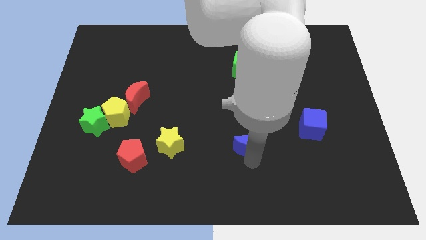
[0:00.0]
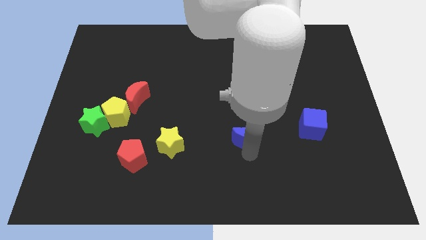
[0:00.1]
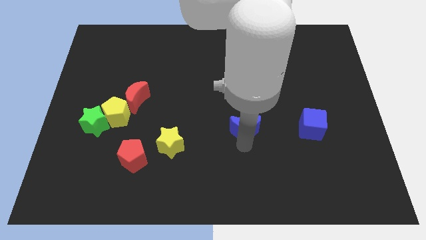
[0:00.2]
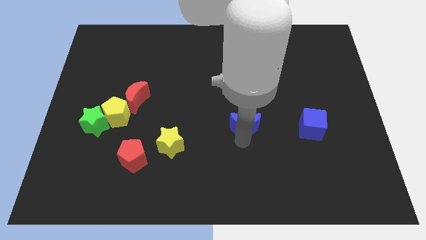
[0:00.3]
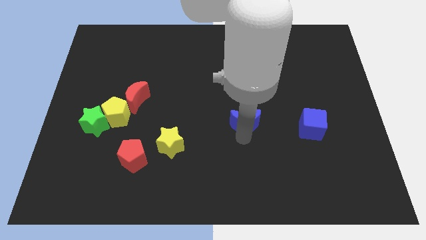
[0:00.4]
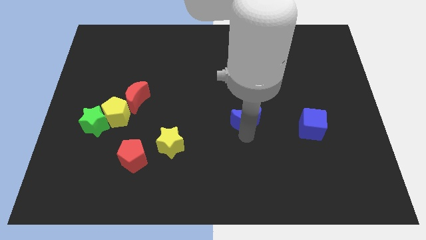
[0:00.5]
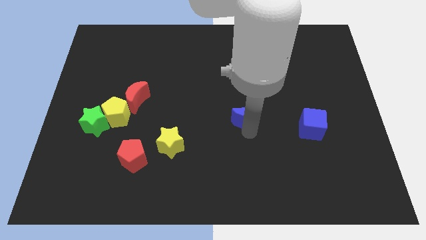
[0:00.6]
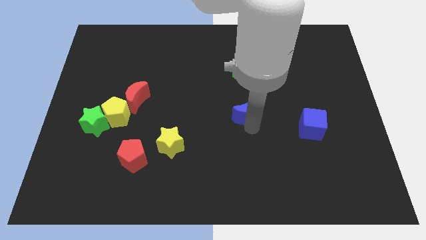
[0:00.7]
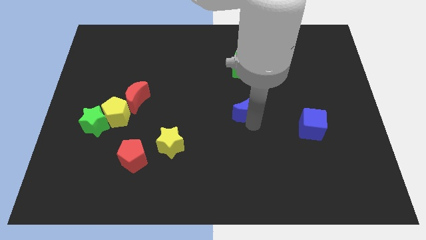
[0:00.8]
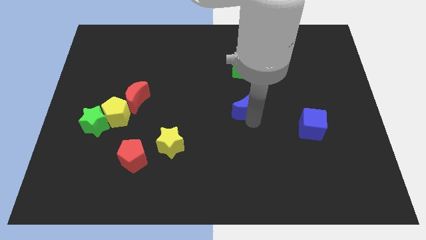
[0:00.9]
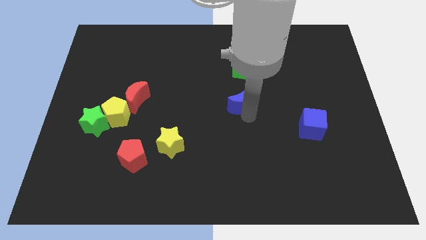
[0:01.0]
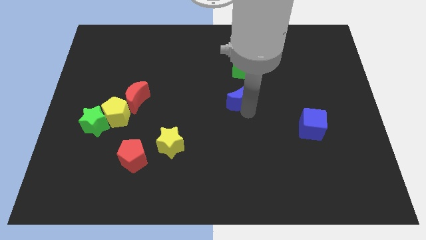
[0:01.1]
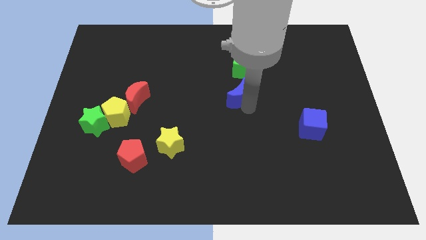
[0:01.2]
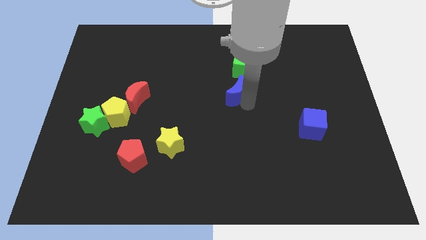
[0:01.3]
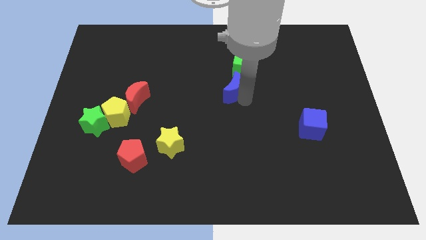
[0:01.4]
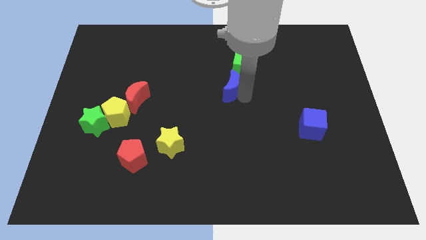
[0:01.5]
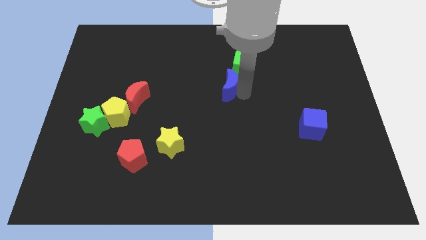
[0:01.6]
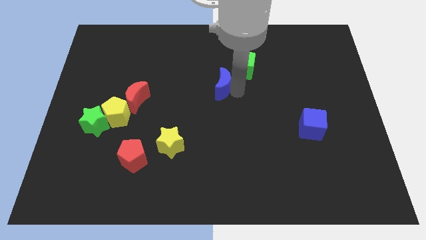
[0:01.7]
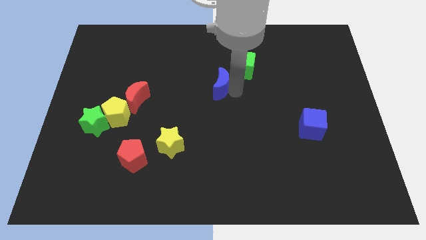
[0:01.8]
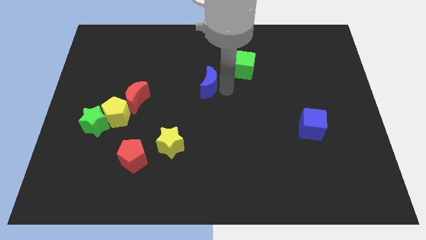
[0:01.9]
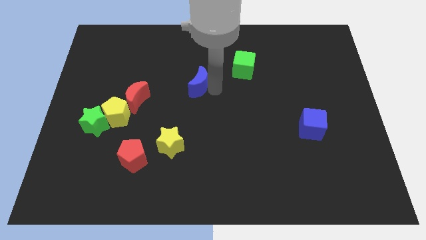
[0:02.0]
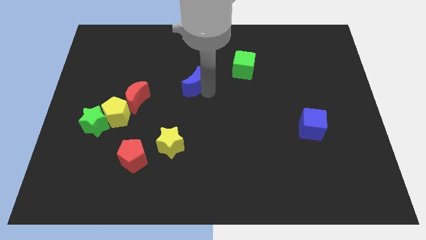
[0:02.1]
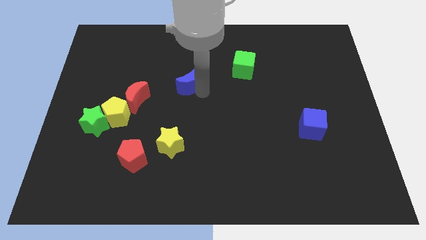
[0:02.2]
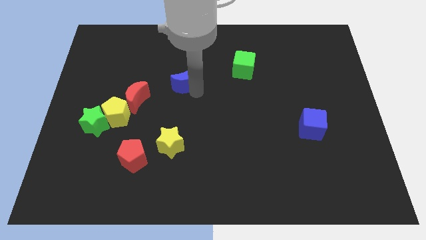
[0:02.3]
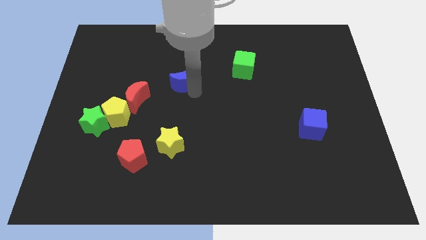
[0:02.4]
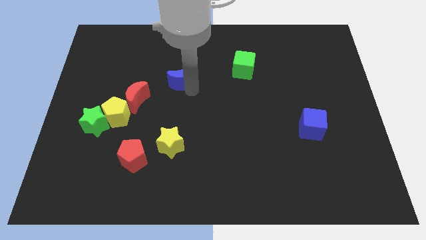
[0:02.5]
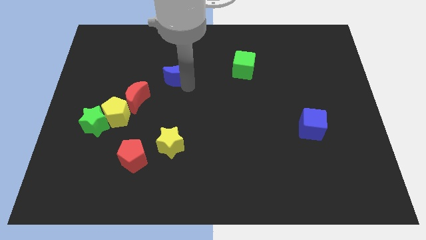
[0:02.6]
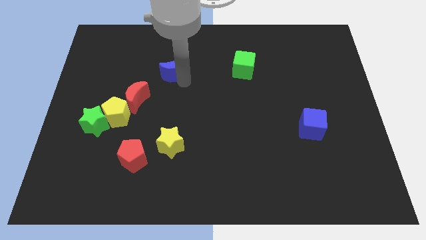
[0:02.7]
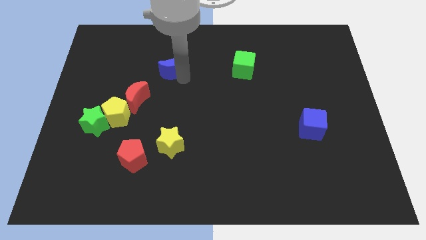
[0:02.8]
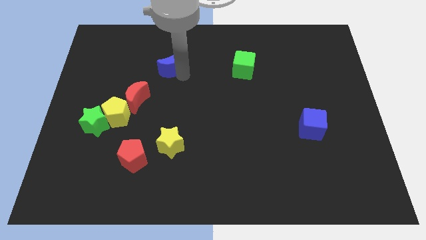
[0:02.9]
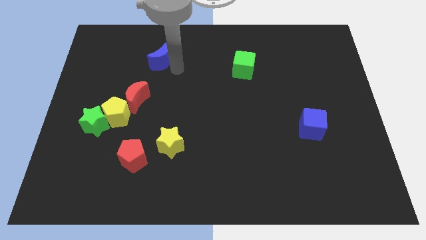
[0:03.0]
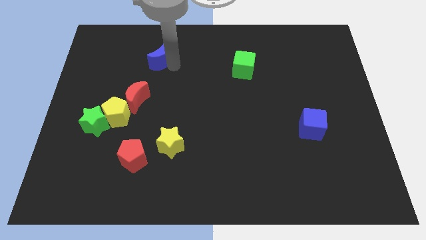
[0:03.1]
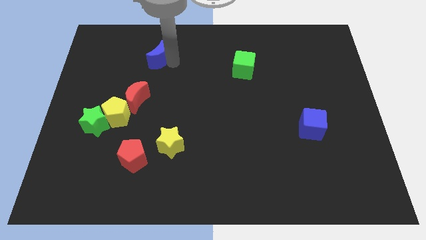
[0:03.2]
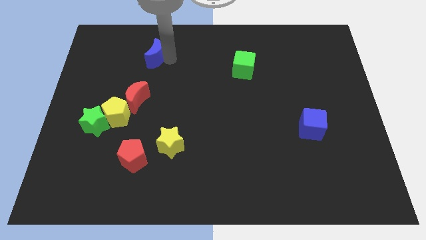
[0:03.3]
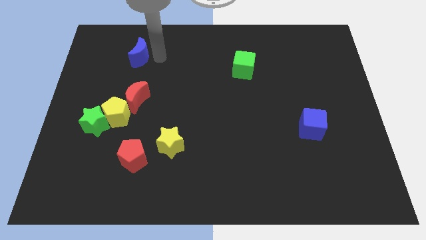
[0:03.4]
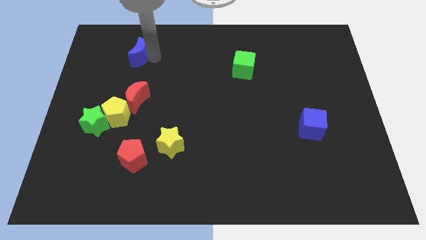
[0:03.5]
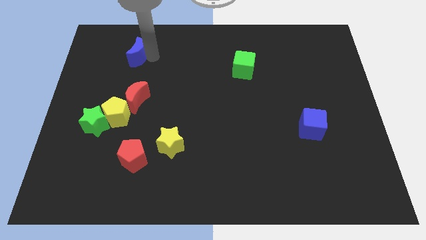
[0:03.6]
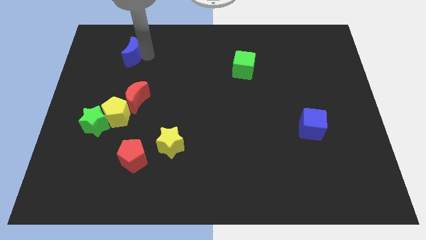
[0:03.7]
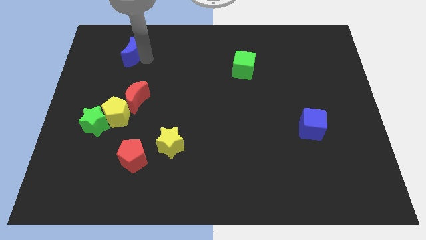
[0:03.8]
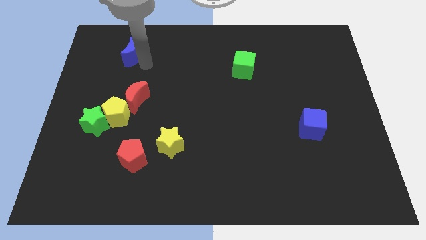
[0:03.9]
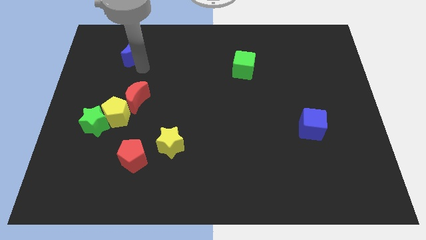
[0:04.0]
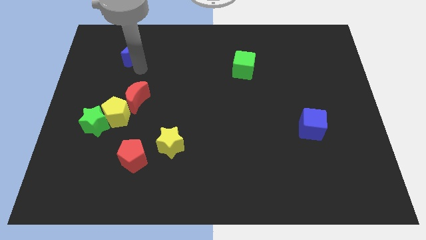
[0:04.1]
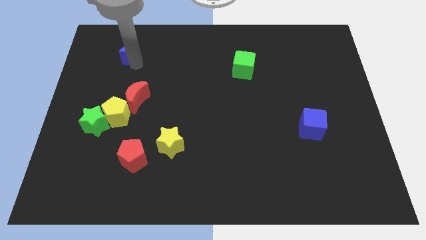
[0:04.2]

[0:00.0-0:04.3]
place blue moon above red moon

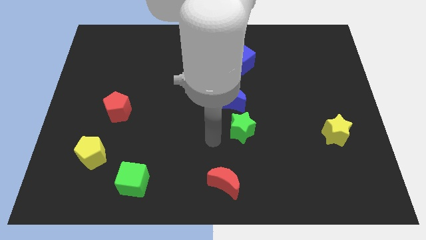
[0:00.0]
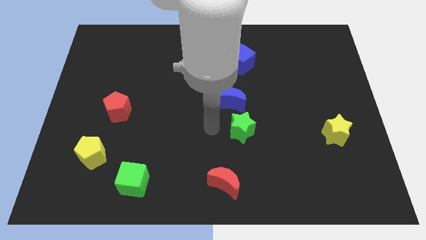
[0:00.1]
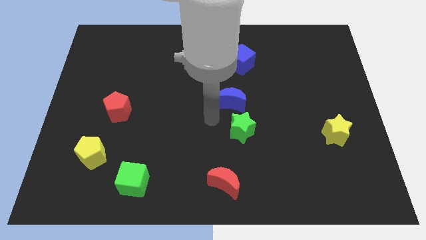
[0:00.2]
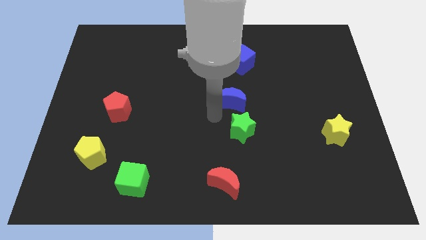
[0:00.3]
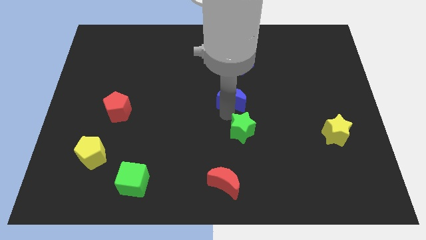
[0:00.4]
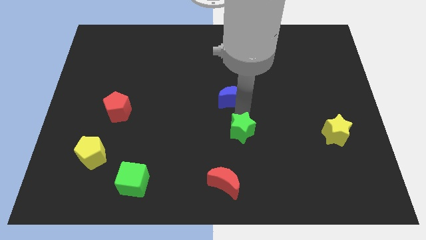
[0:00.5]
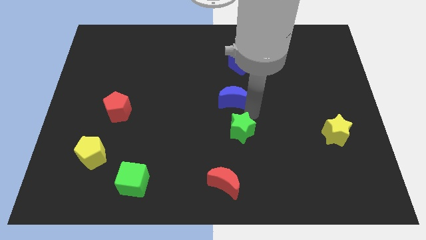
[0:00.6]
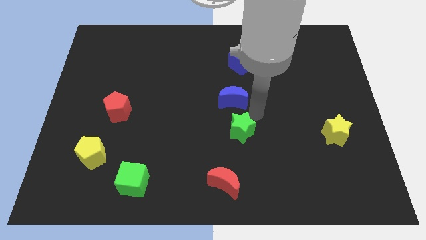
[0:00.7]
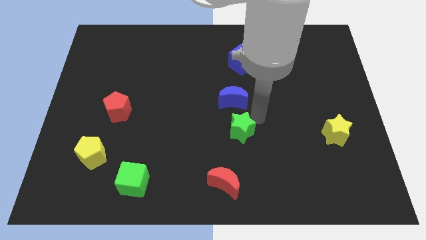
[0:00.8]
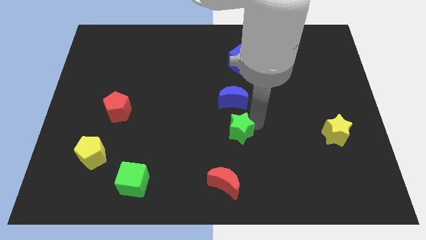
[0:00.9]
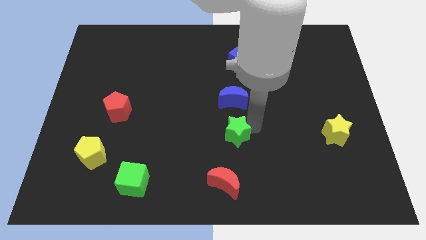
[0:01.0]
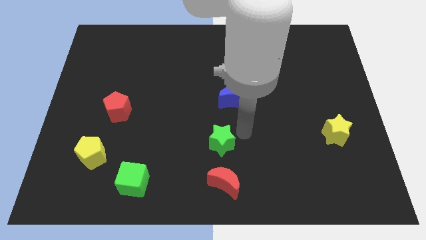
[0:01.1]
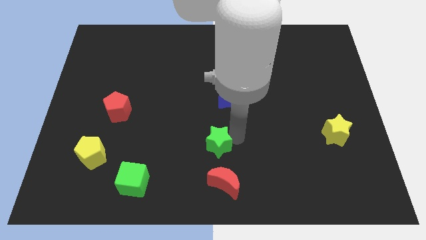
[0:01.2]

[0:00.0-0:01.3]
push the green star to the top side of the red moon

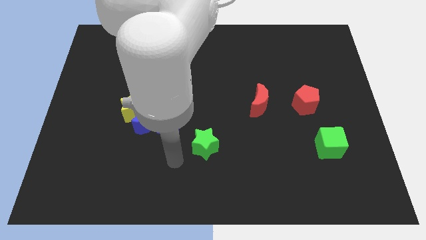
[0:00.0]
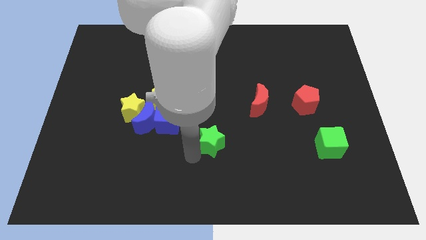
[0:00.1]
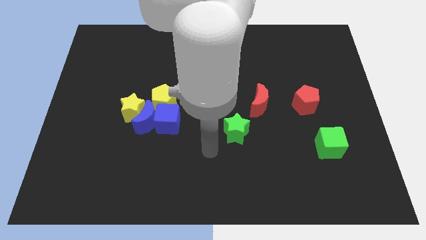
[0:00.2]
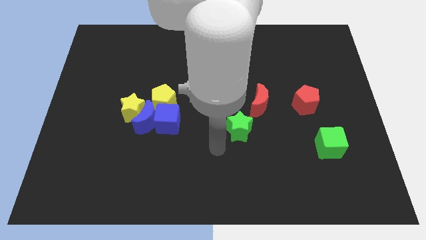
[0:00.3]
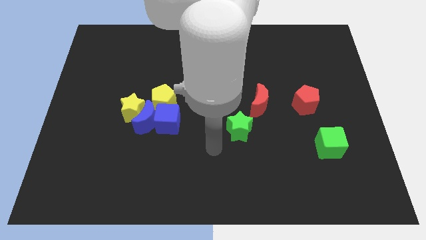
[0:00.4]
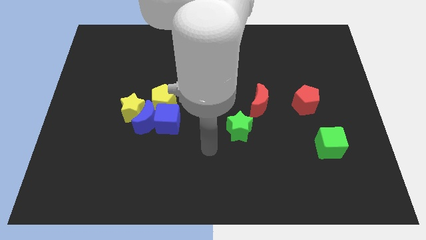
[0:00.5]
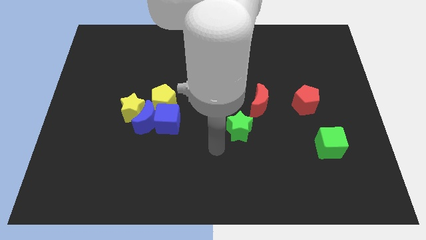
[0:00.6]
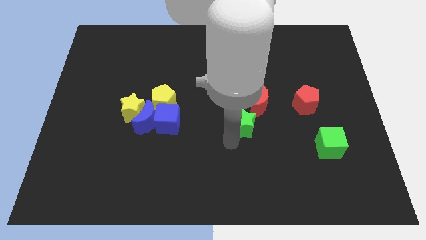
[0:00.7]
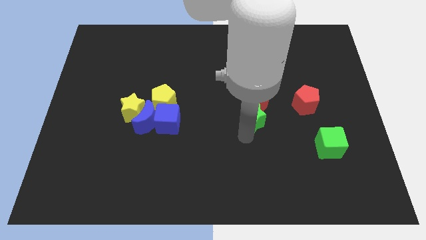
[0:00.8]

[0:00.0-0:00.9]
push the green star below the red crescent

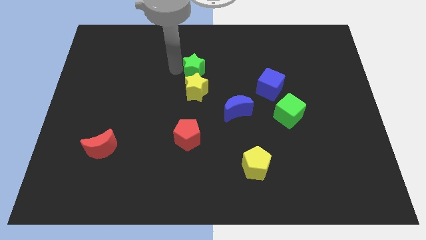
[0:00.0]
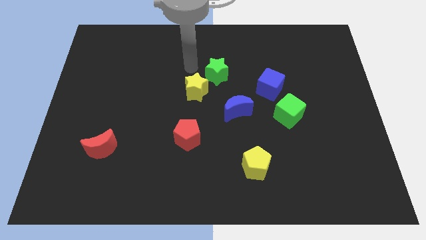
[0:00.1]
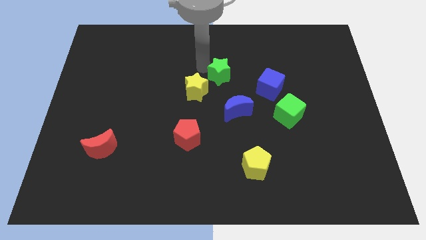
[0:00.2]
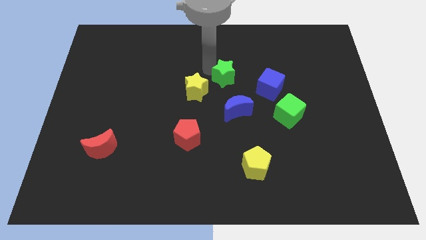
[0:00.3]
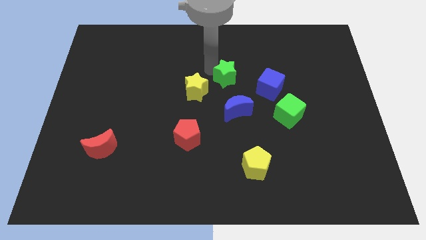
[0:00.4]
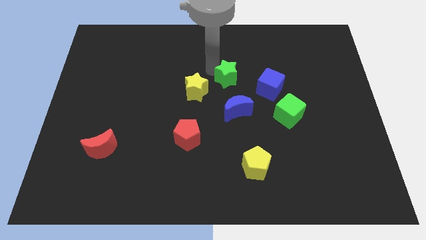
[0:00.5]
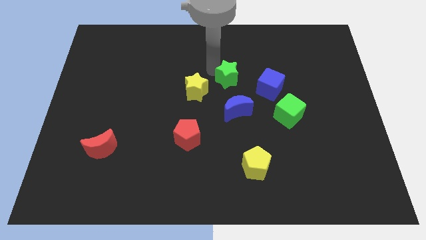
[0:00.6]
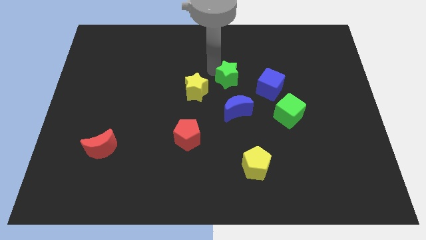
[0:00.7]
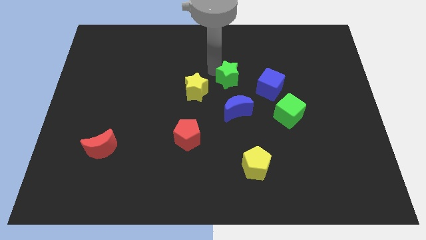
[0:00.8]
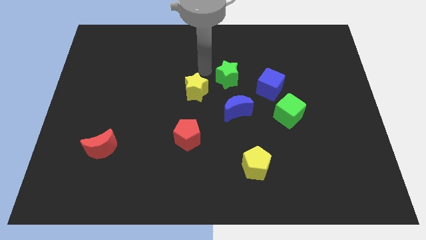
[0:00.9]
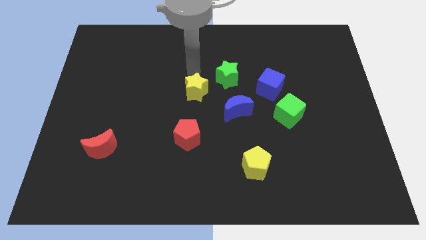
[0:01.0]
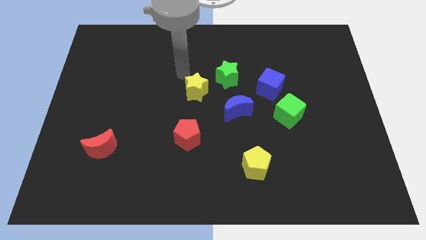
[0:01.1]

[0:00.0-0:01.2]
put the green star towards the blue cube

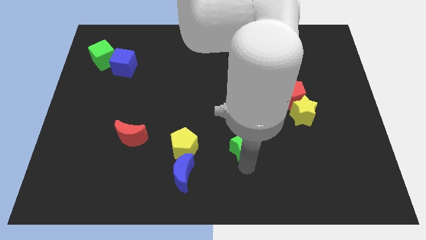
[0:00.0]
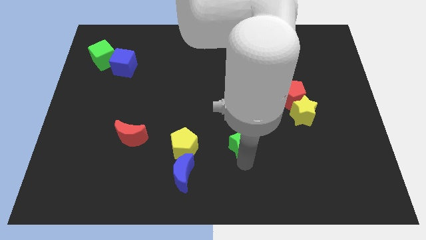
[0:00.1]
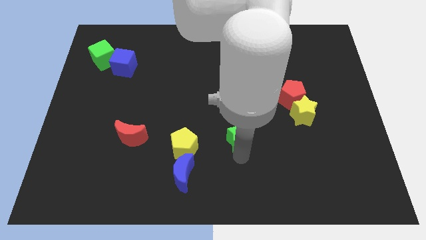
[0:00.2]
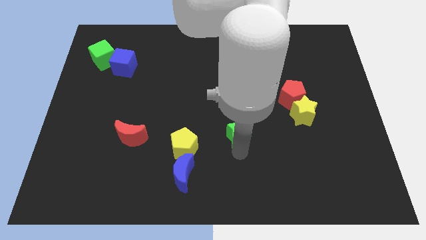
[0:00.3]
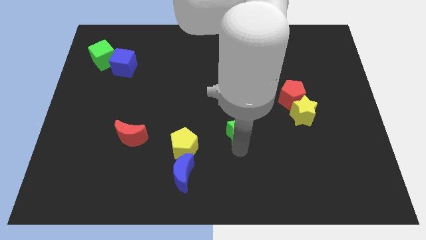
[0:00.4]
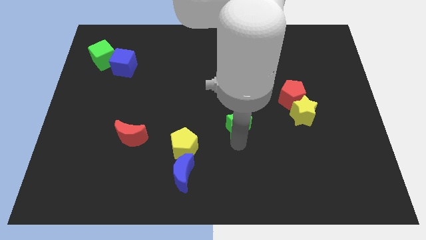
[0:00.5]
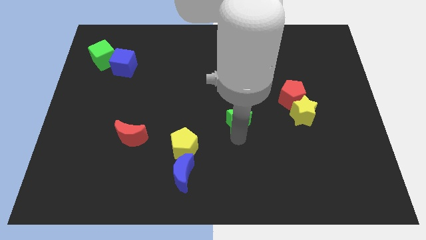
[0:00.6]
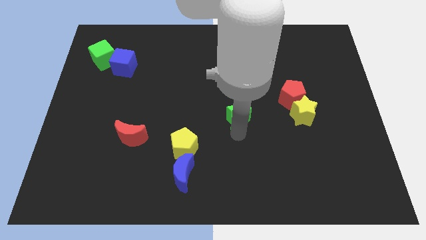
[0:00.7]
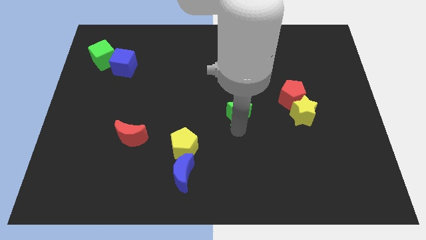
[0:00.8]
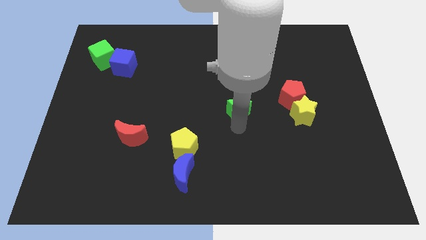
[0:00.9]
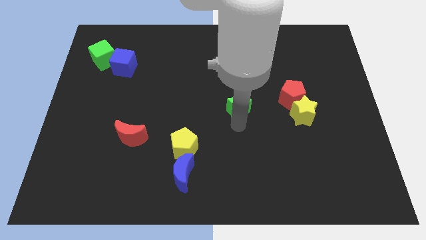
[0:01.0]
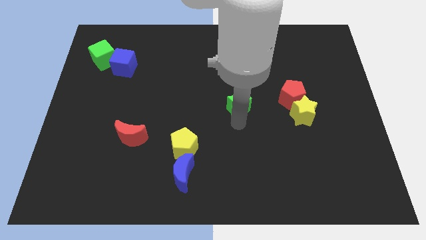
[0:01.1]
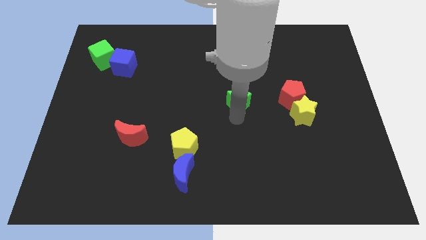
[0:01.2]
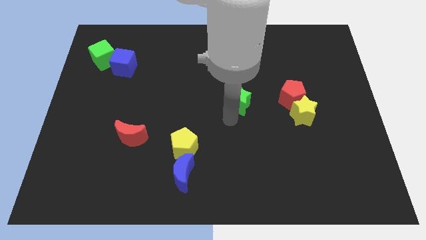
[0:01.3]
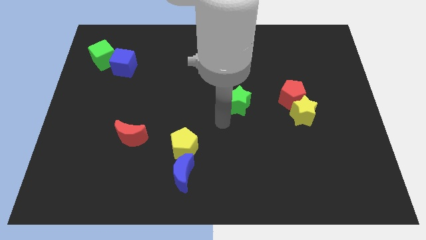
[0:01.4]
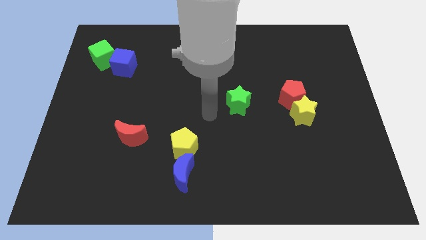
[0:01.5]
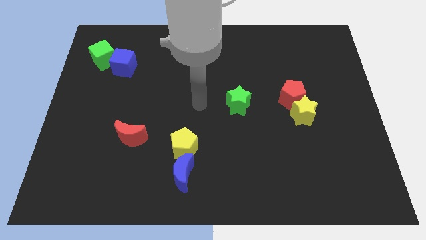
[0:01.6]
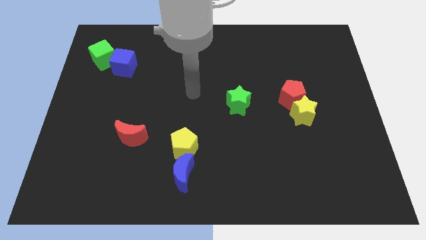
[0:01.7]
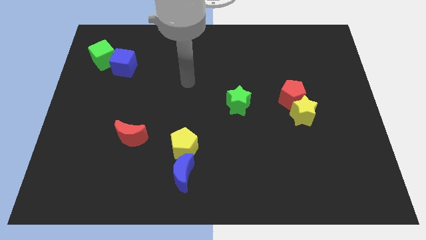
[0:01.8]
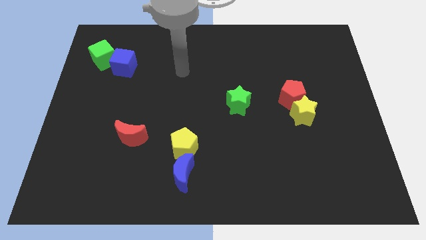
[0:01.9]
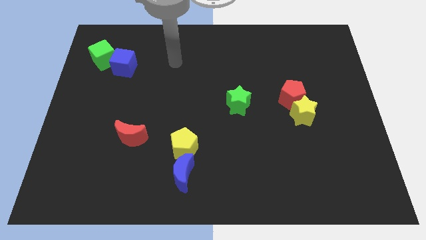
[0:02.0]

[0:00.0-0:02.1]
slide green star to the left of red pentagon
